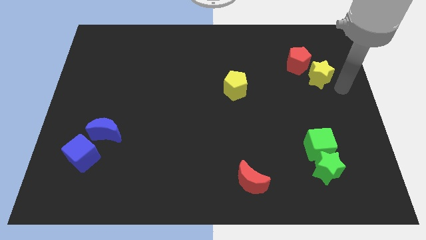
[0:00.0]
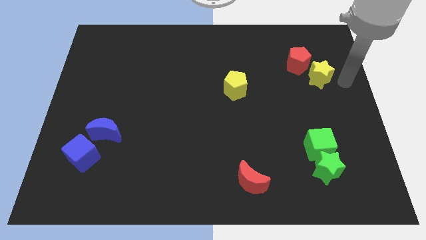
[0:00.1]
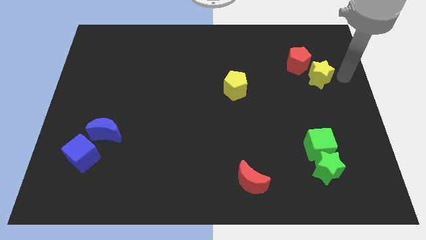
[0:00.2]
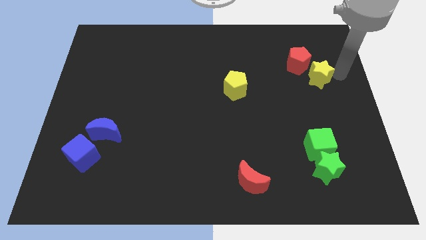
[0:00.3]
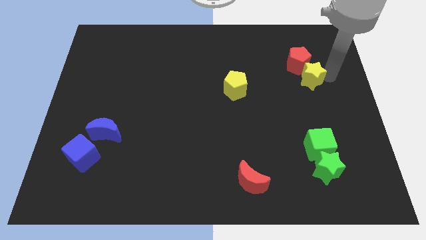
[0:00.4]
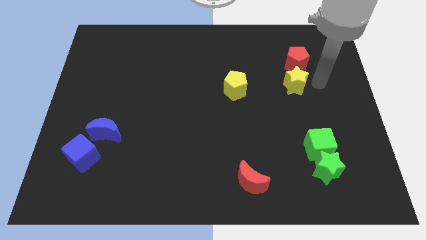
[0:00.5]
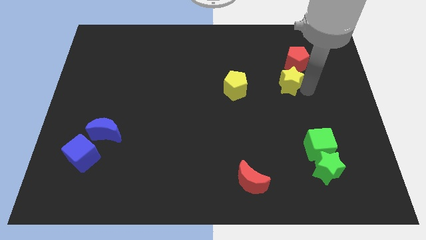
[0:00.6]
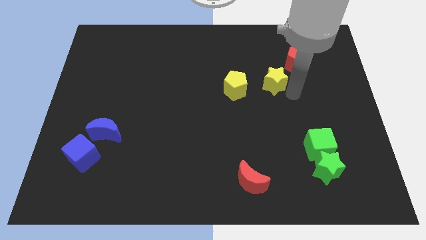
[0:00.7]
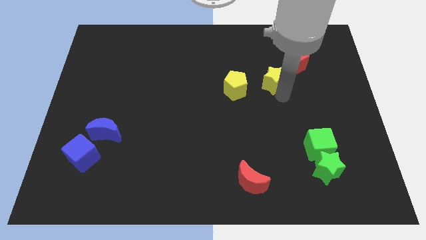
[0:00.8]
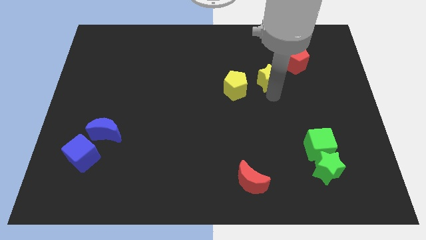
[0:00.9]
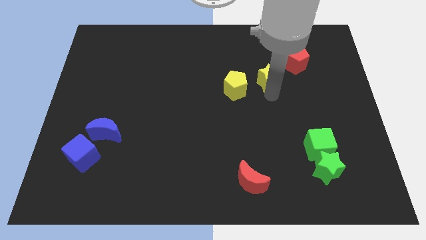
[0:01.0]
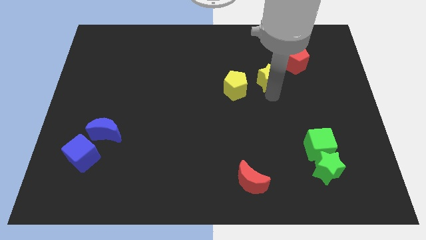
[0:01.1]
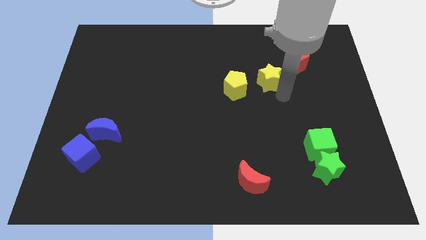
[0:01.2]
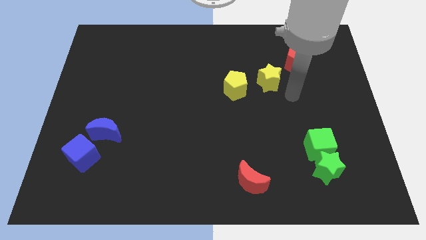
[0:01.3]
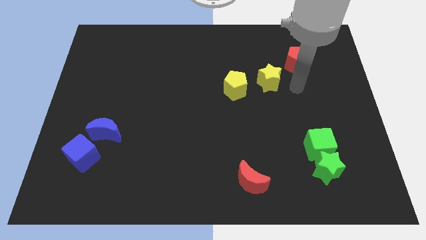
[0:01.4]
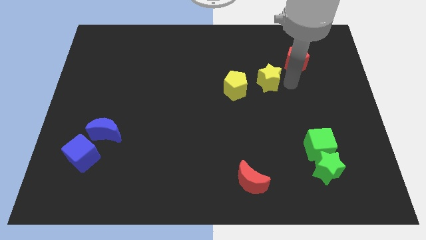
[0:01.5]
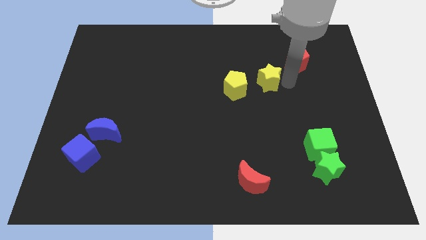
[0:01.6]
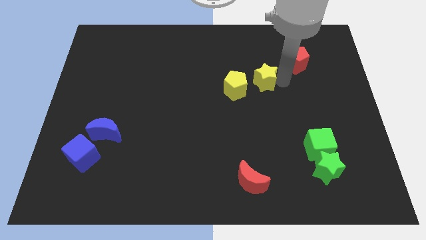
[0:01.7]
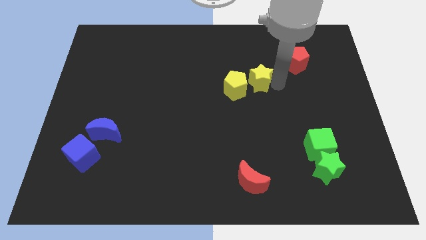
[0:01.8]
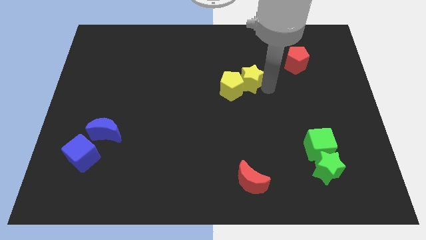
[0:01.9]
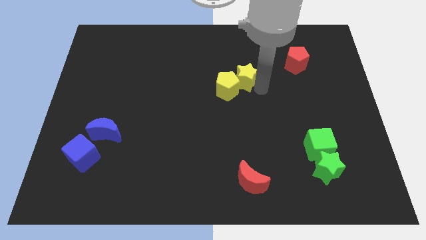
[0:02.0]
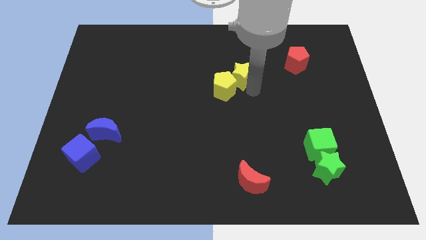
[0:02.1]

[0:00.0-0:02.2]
push yellow star into yellow pentagon

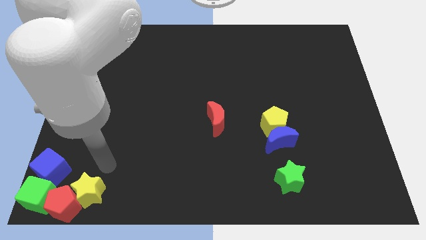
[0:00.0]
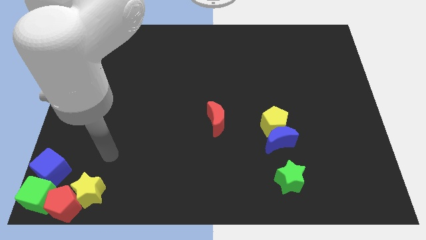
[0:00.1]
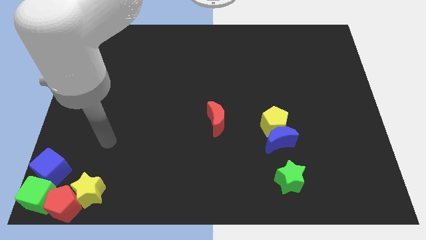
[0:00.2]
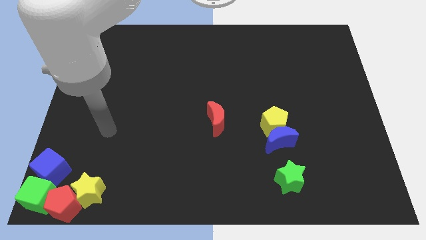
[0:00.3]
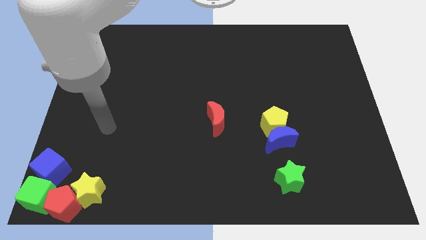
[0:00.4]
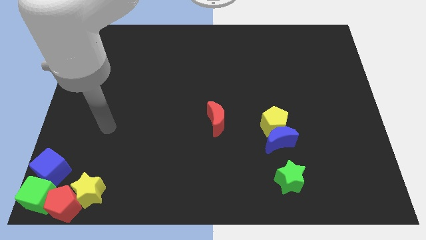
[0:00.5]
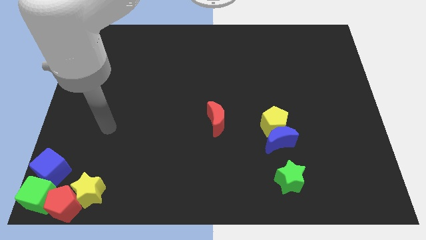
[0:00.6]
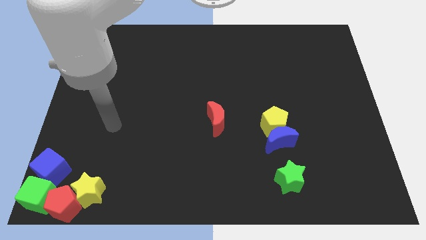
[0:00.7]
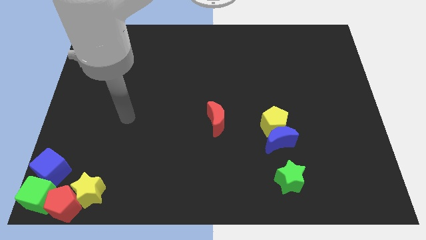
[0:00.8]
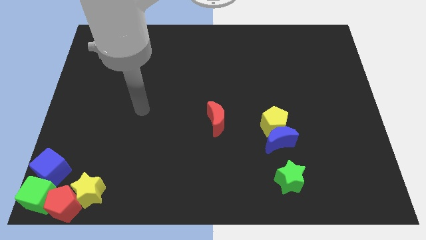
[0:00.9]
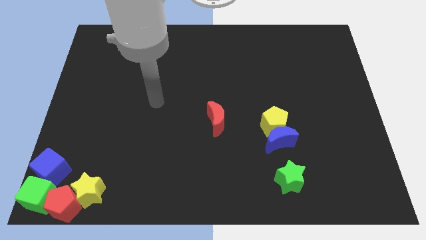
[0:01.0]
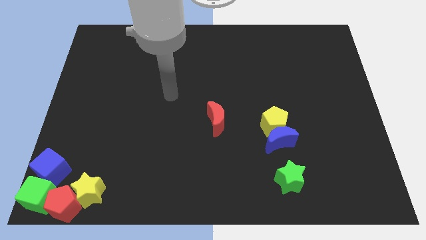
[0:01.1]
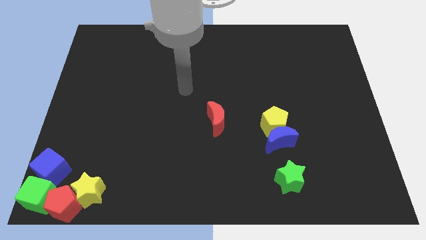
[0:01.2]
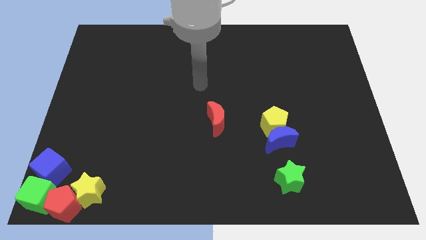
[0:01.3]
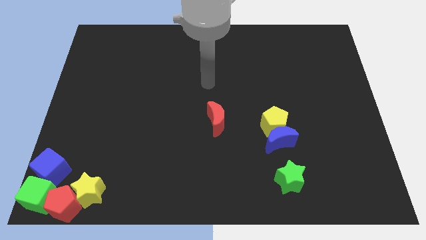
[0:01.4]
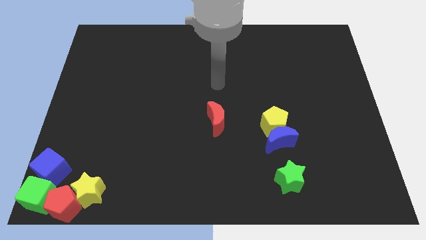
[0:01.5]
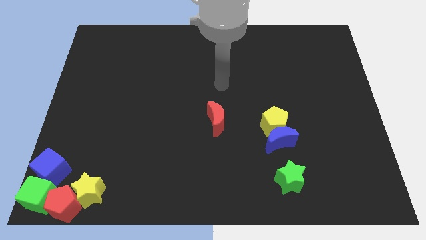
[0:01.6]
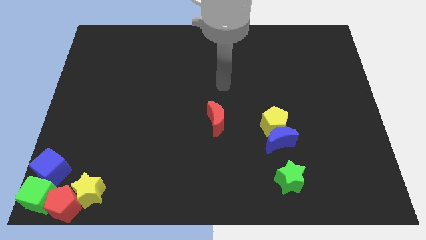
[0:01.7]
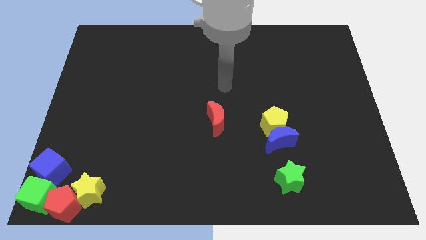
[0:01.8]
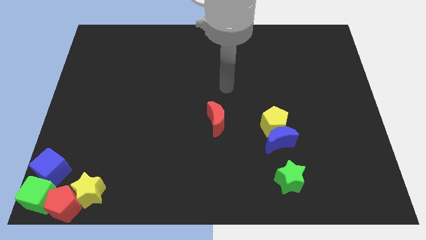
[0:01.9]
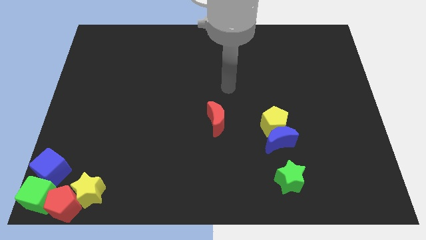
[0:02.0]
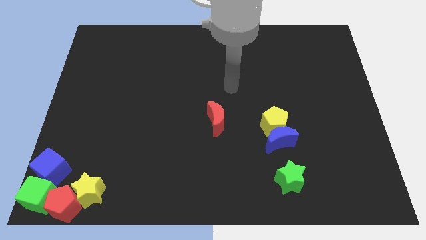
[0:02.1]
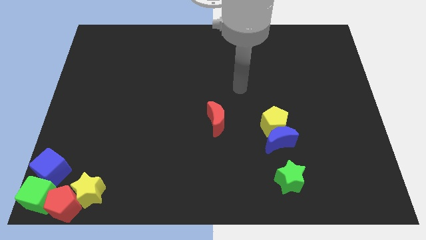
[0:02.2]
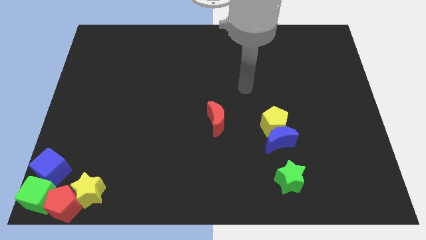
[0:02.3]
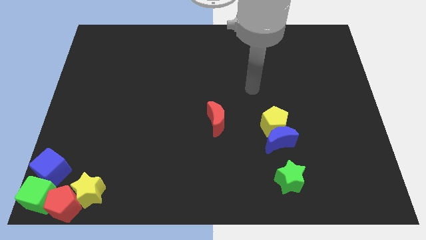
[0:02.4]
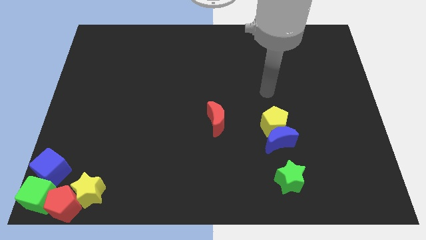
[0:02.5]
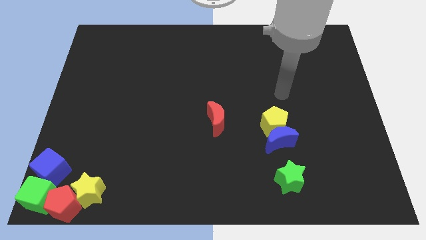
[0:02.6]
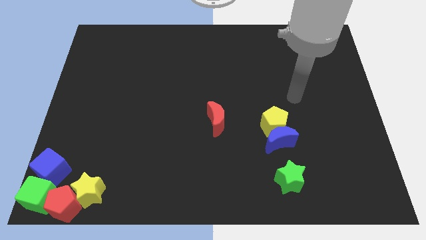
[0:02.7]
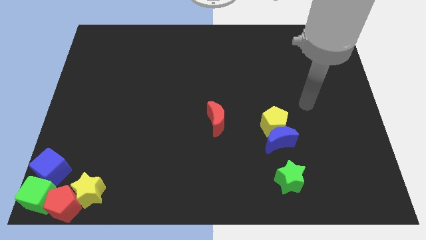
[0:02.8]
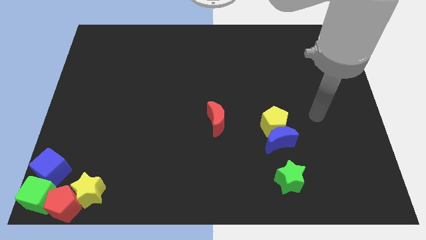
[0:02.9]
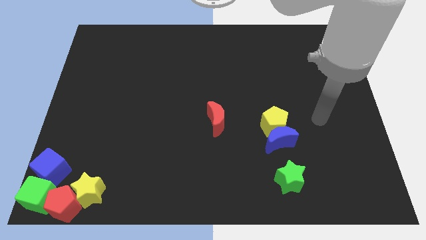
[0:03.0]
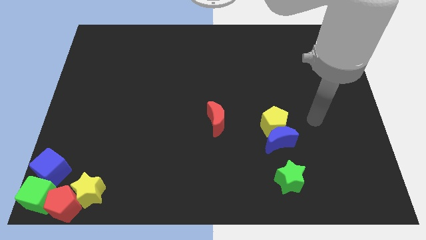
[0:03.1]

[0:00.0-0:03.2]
move the arm away from the yellow star

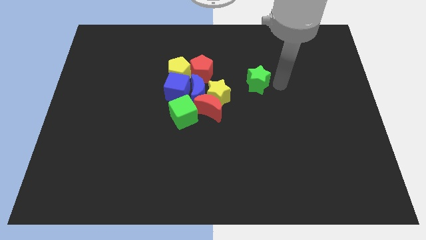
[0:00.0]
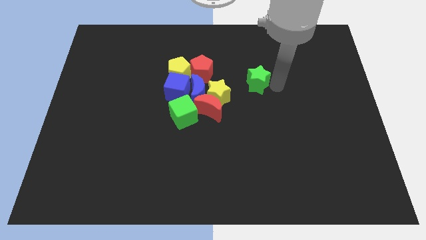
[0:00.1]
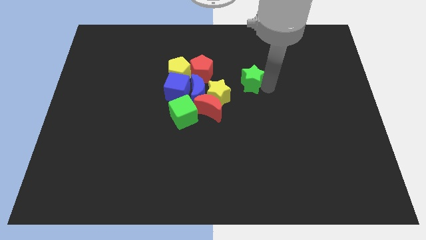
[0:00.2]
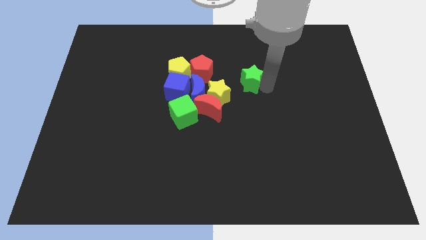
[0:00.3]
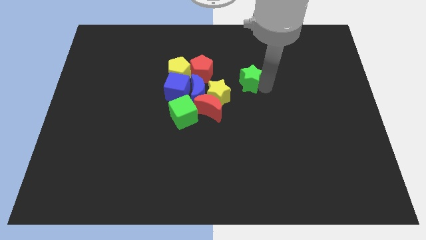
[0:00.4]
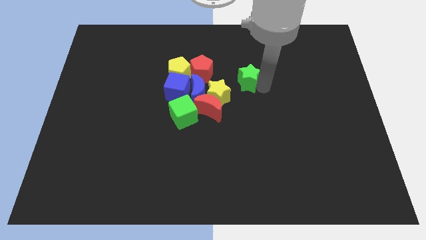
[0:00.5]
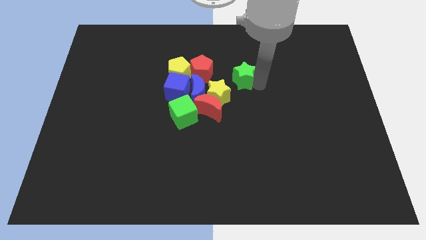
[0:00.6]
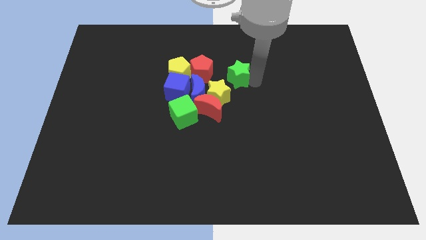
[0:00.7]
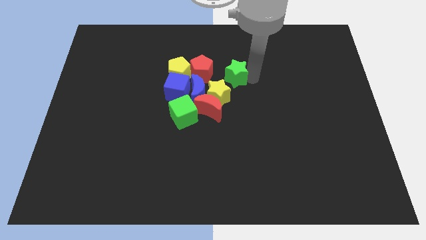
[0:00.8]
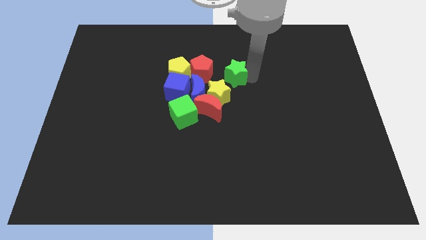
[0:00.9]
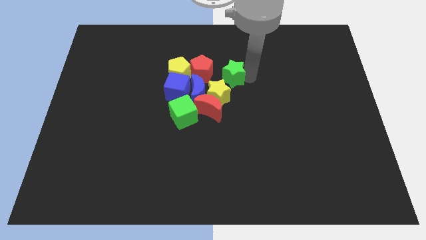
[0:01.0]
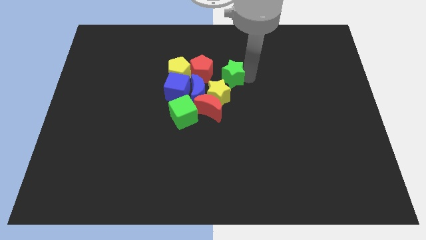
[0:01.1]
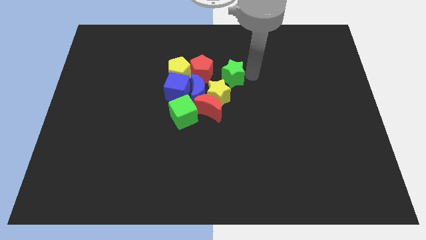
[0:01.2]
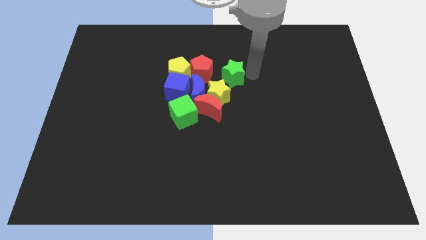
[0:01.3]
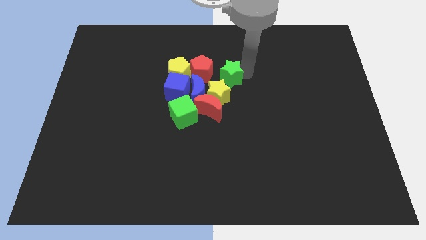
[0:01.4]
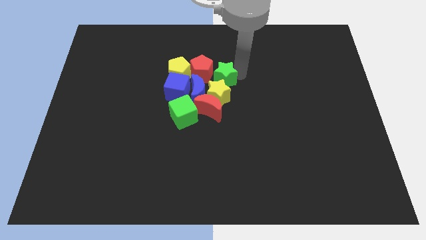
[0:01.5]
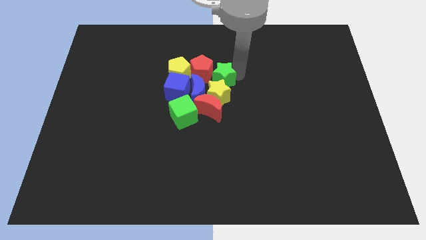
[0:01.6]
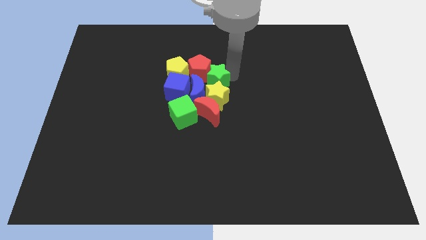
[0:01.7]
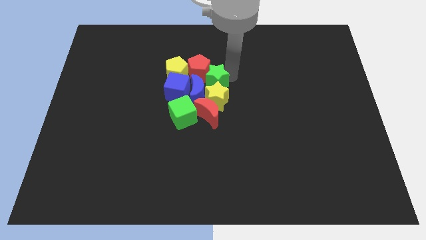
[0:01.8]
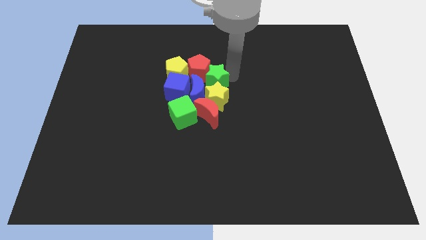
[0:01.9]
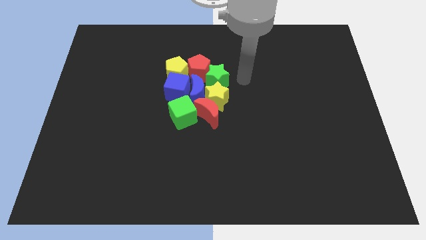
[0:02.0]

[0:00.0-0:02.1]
push the green star to the top side of the yellow star

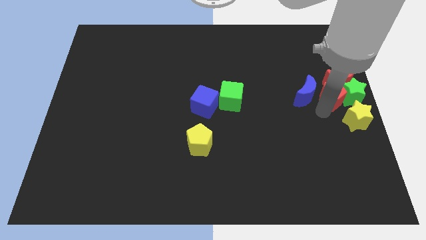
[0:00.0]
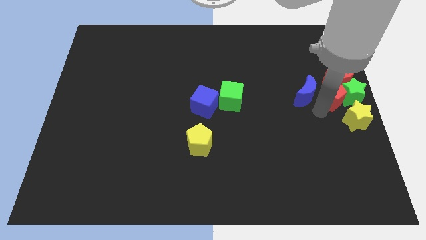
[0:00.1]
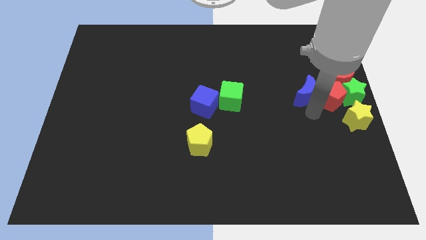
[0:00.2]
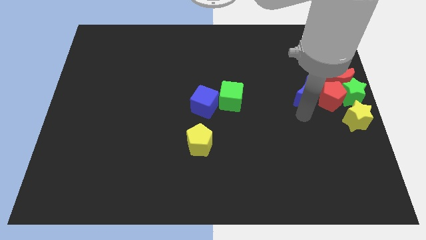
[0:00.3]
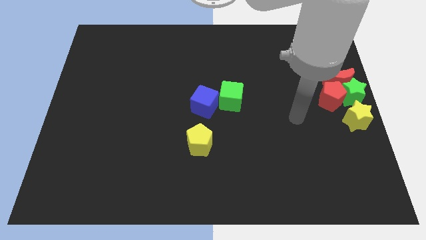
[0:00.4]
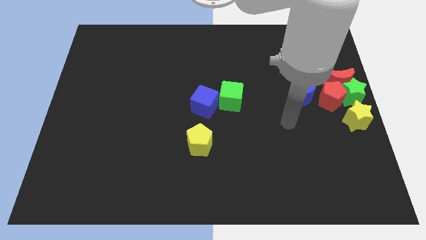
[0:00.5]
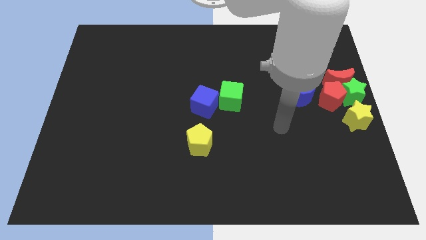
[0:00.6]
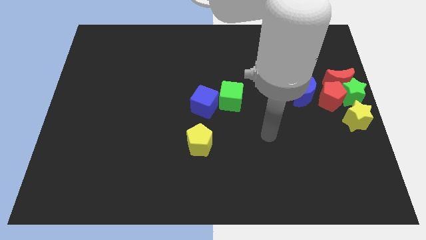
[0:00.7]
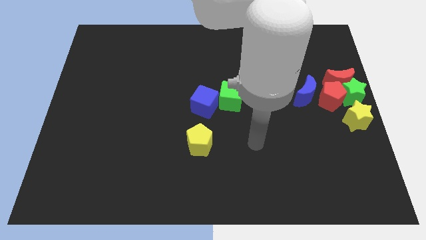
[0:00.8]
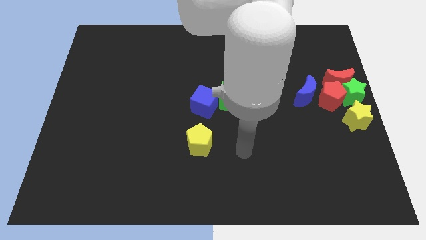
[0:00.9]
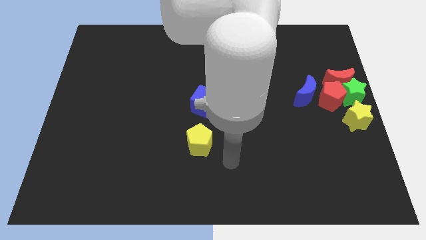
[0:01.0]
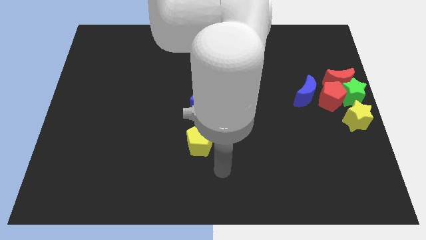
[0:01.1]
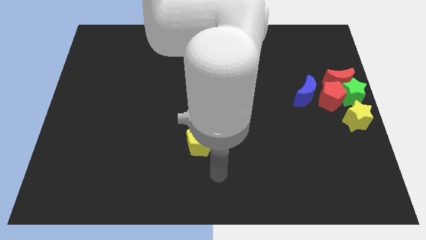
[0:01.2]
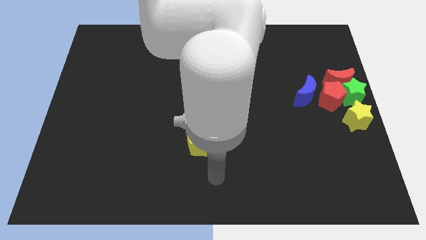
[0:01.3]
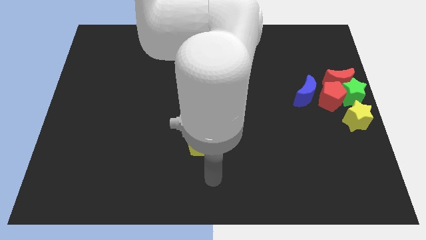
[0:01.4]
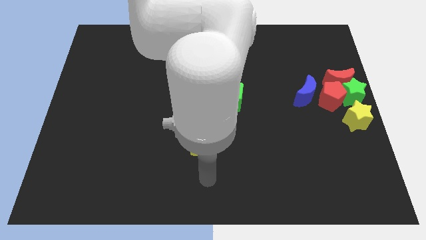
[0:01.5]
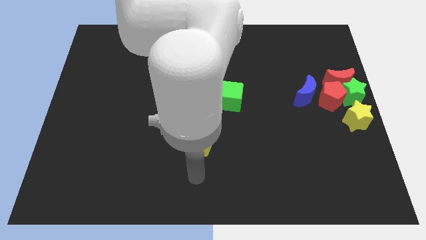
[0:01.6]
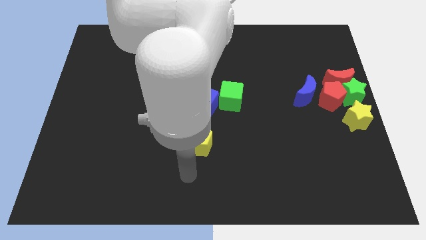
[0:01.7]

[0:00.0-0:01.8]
place your hand below the yellow pentagon
